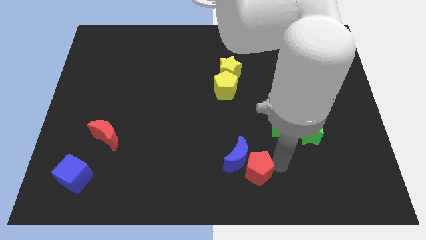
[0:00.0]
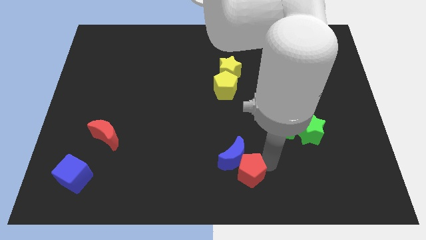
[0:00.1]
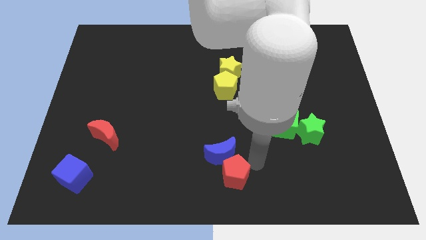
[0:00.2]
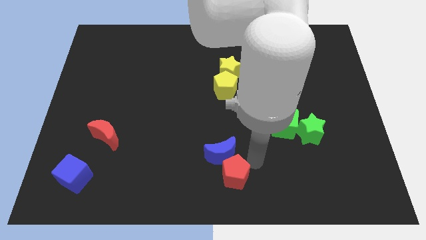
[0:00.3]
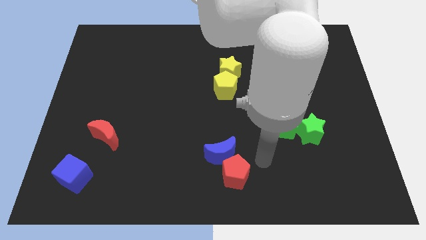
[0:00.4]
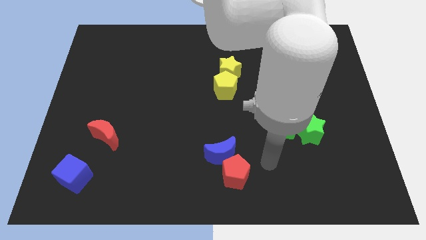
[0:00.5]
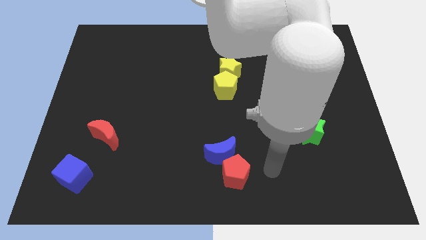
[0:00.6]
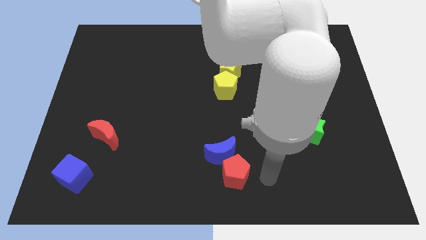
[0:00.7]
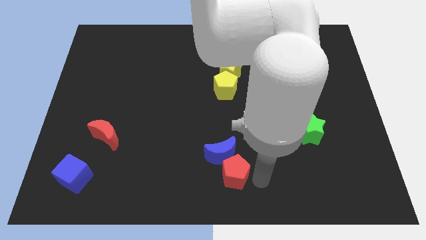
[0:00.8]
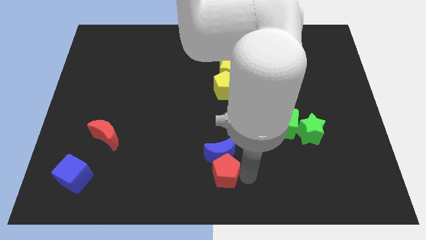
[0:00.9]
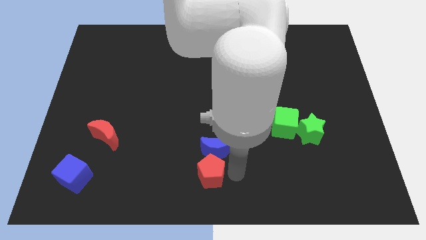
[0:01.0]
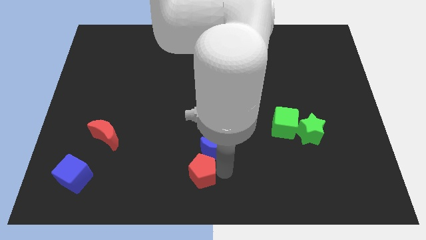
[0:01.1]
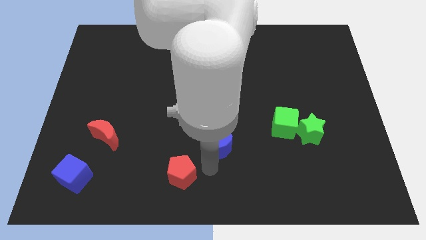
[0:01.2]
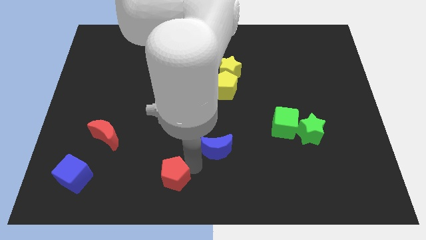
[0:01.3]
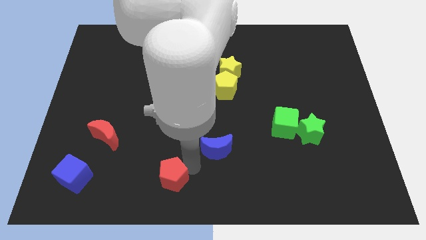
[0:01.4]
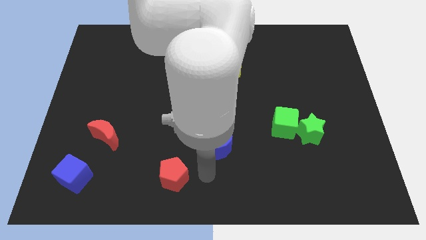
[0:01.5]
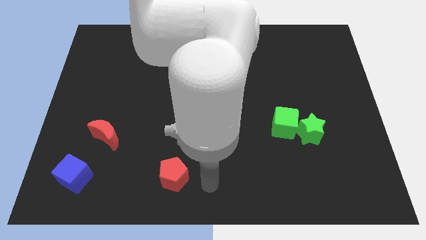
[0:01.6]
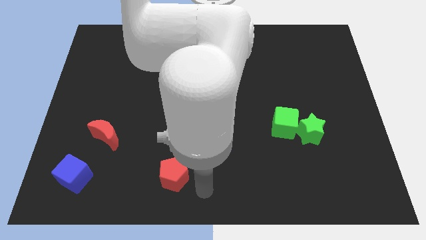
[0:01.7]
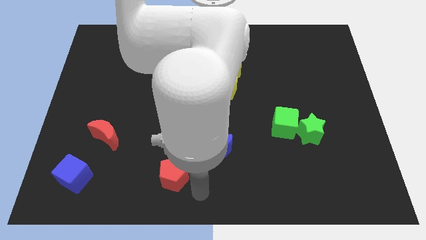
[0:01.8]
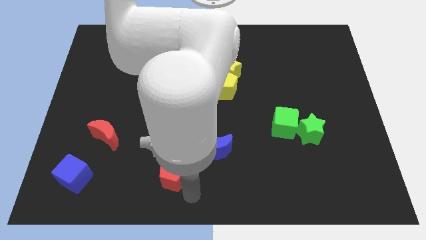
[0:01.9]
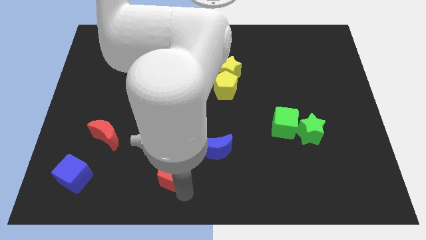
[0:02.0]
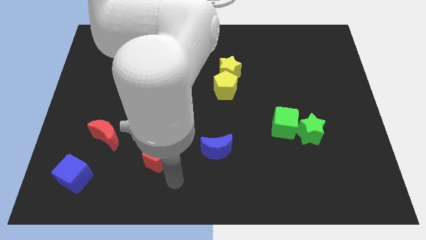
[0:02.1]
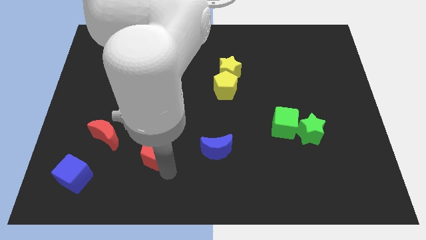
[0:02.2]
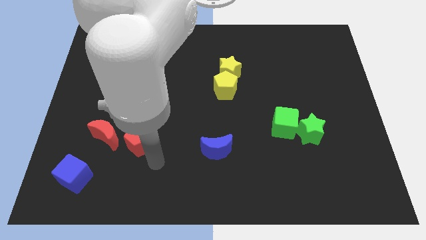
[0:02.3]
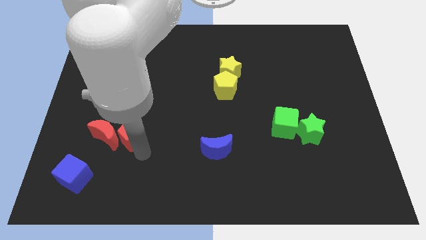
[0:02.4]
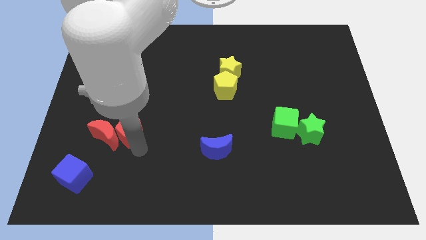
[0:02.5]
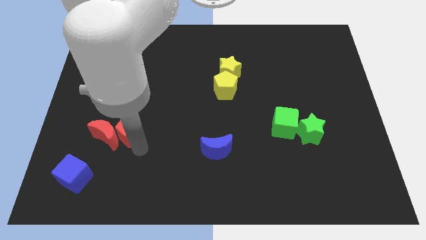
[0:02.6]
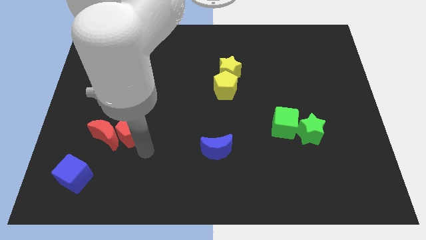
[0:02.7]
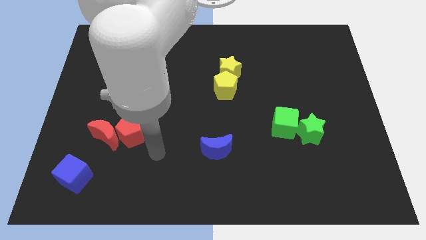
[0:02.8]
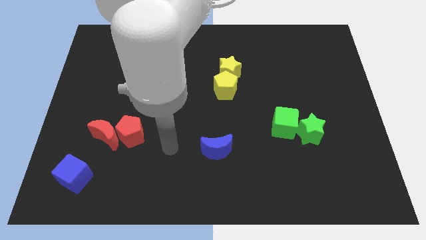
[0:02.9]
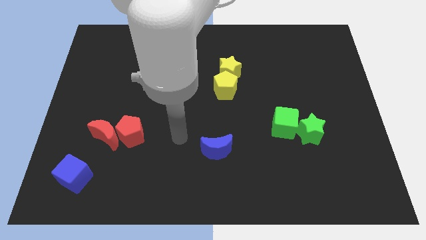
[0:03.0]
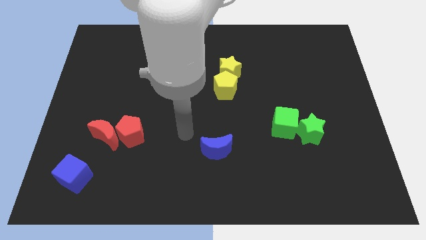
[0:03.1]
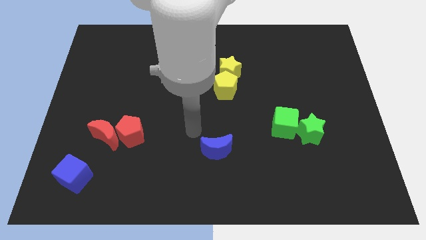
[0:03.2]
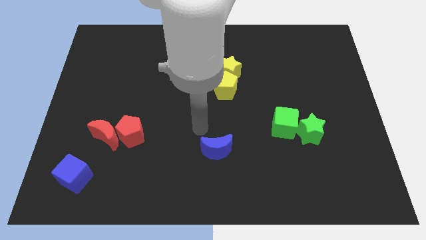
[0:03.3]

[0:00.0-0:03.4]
push red pentagon to the right of red moon

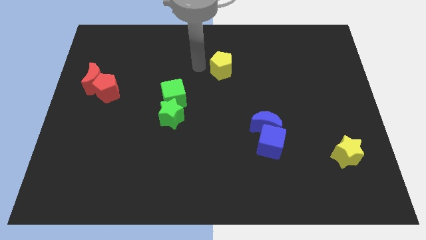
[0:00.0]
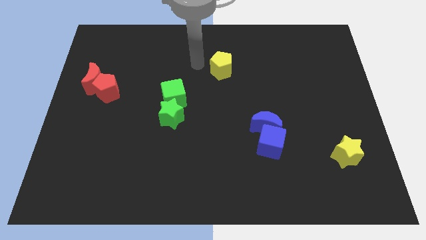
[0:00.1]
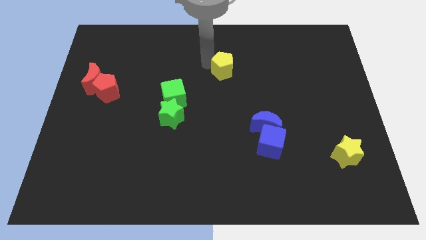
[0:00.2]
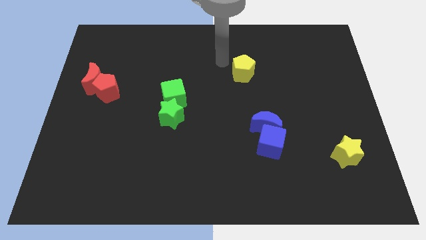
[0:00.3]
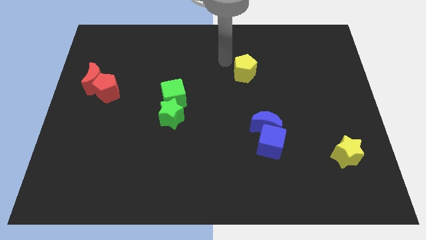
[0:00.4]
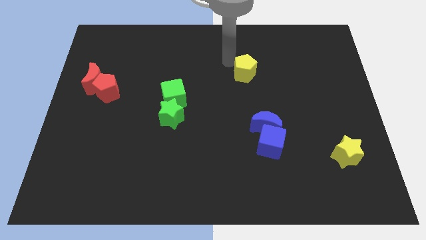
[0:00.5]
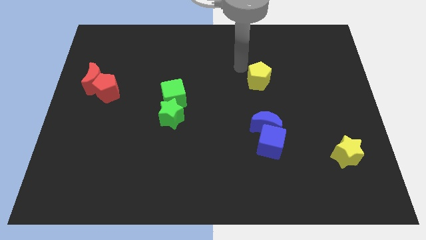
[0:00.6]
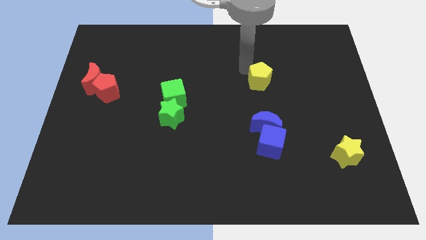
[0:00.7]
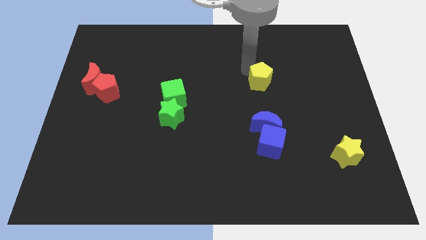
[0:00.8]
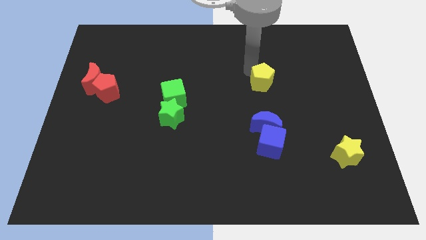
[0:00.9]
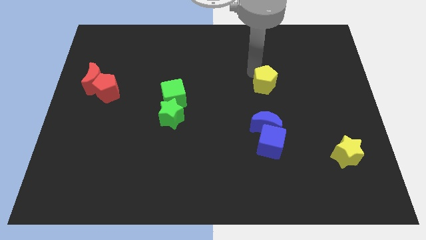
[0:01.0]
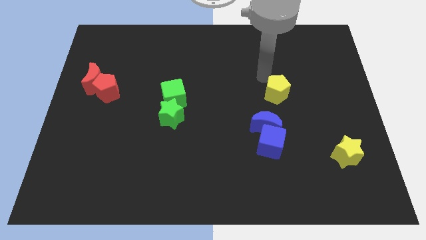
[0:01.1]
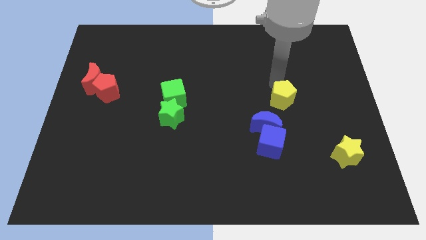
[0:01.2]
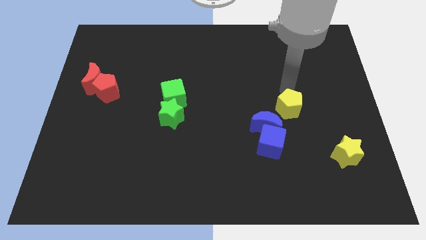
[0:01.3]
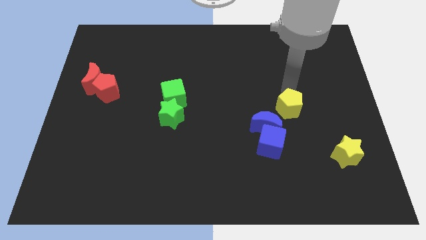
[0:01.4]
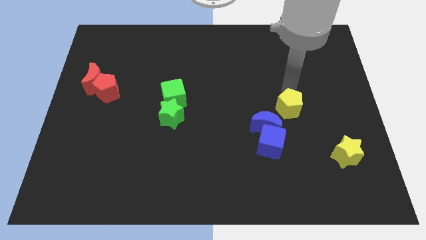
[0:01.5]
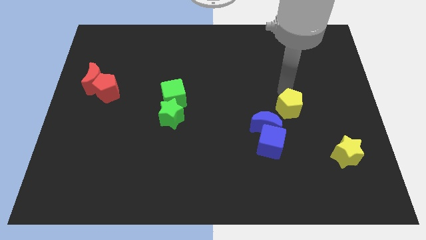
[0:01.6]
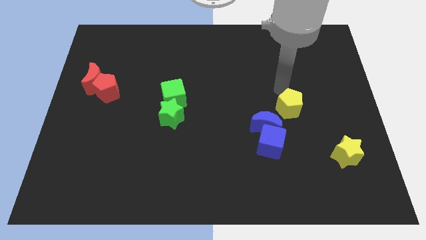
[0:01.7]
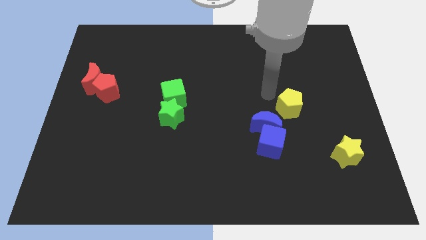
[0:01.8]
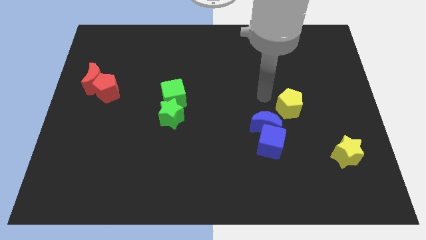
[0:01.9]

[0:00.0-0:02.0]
move the yellow pentagon near the blue crescent

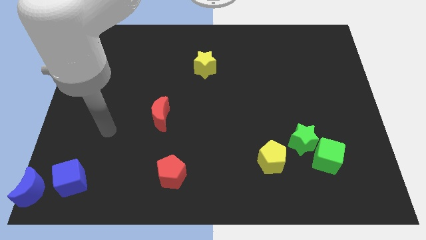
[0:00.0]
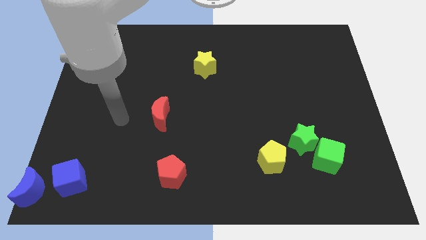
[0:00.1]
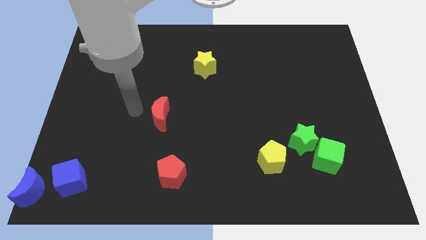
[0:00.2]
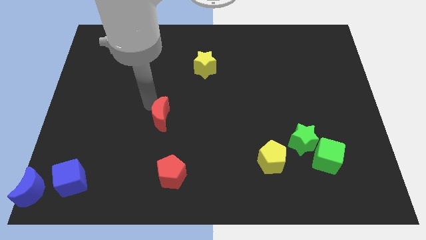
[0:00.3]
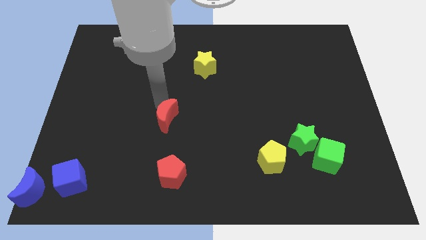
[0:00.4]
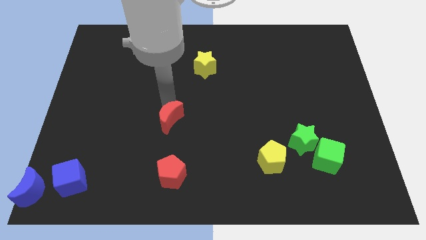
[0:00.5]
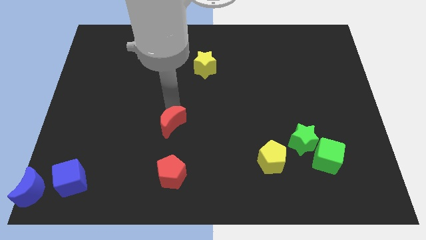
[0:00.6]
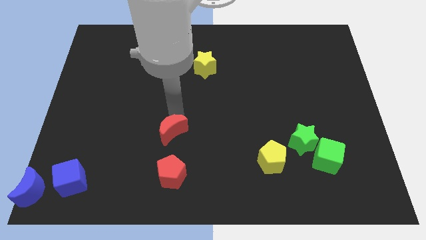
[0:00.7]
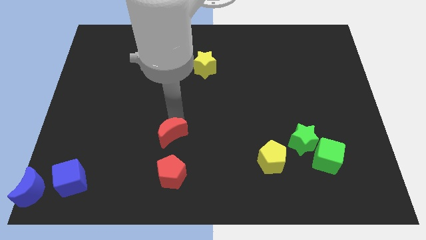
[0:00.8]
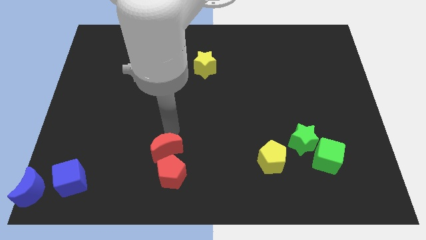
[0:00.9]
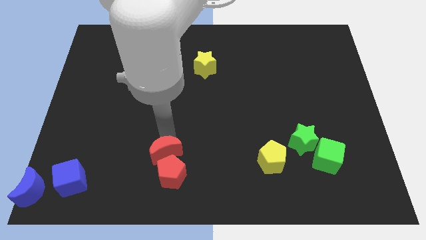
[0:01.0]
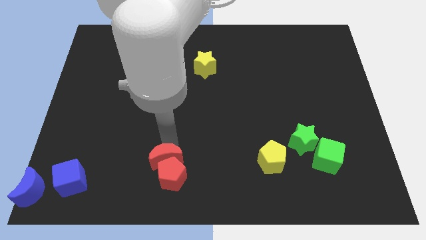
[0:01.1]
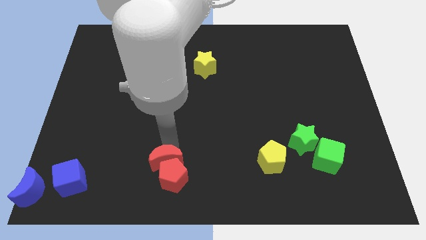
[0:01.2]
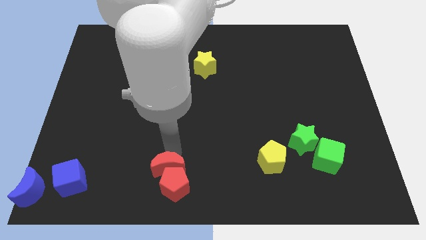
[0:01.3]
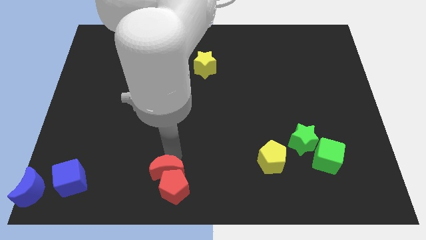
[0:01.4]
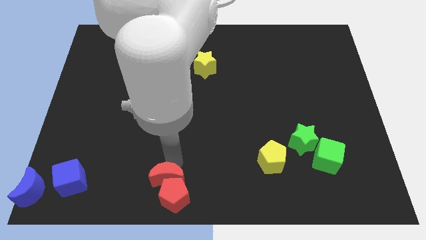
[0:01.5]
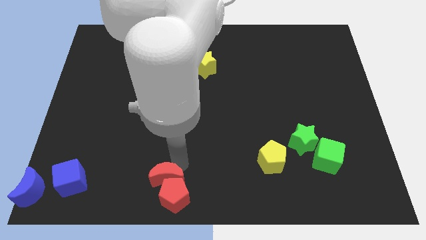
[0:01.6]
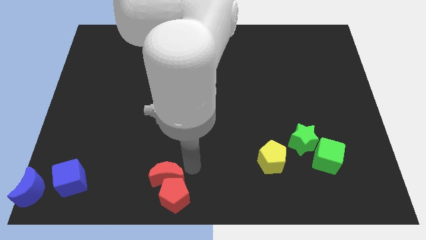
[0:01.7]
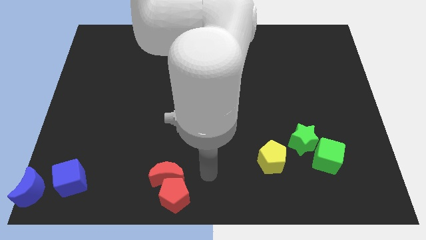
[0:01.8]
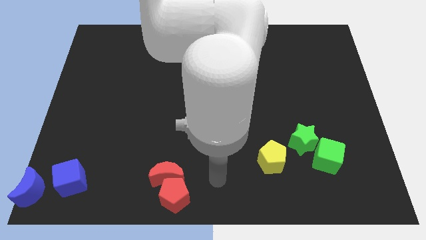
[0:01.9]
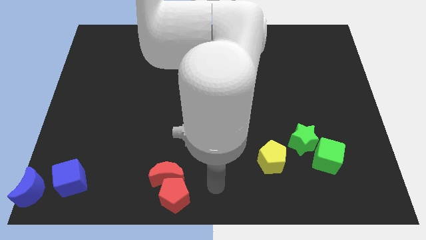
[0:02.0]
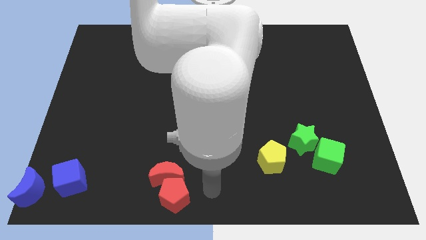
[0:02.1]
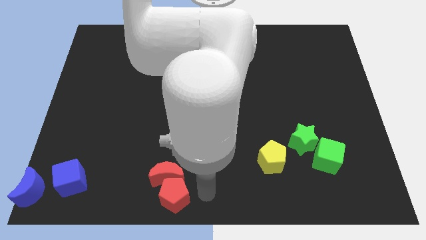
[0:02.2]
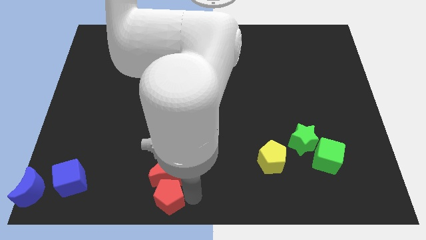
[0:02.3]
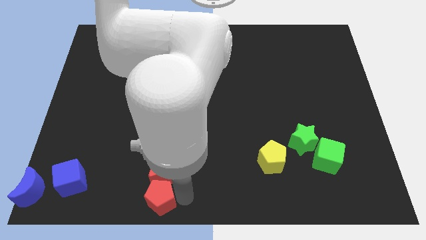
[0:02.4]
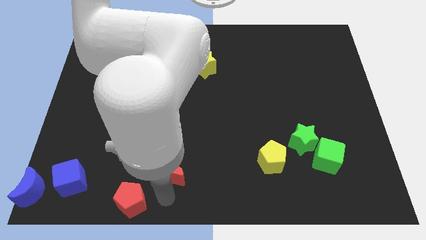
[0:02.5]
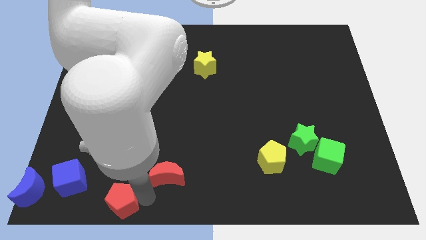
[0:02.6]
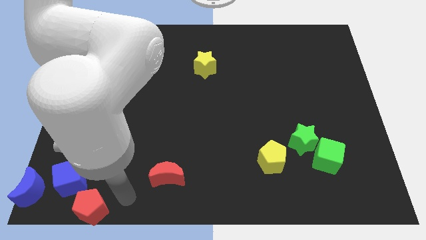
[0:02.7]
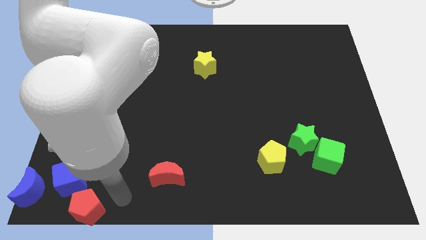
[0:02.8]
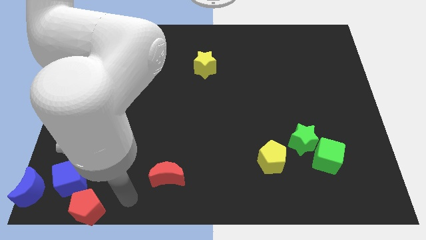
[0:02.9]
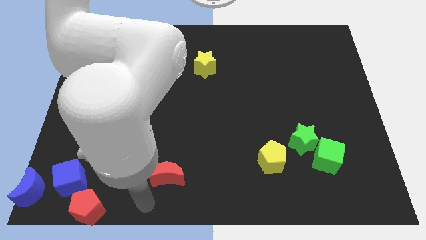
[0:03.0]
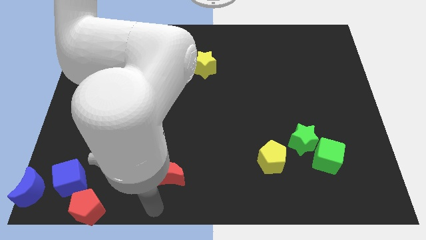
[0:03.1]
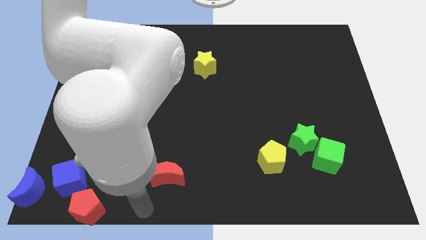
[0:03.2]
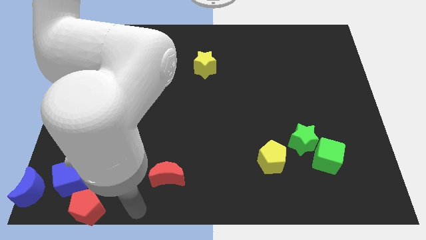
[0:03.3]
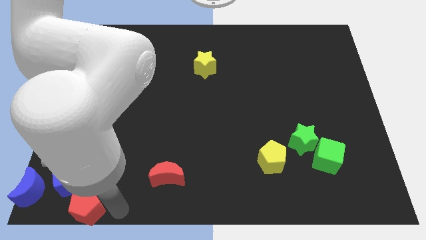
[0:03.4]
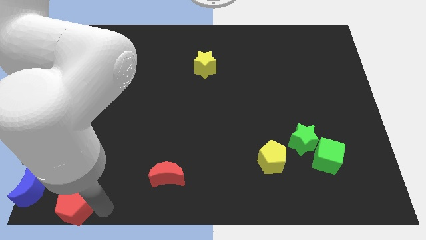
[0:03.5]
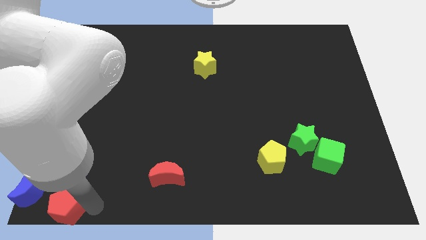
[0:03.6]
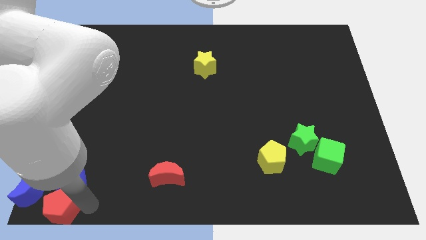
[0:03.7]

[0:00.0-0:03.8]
slide the red pentagon into the bottom side of the blue cube
